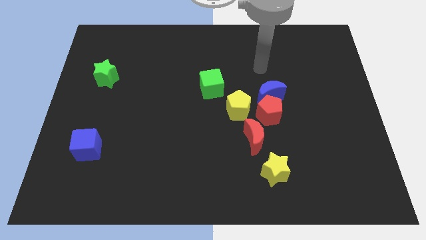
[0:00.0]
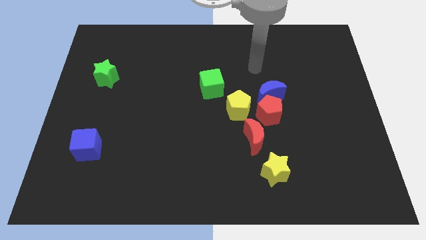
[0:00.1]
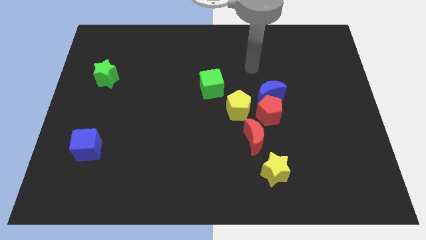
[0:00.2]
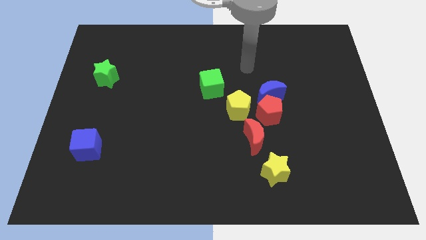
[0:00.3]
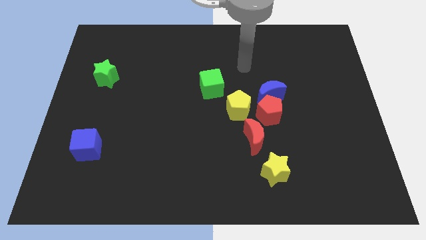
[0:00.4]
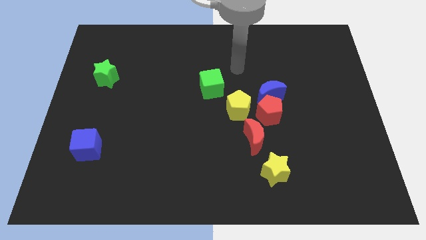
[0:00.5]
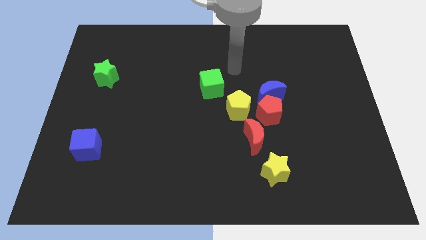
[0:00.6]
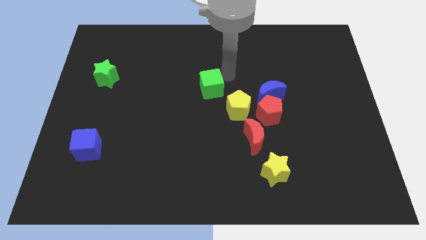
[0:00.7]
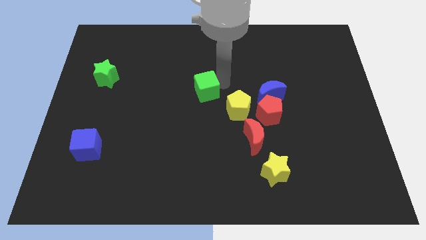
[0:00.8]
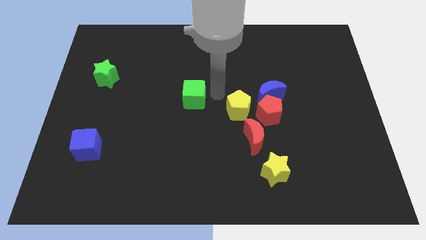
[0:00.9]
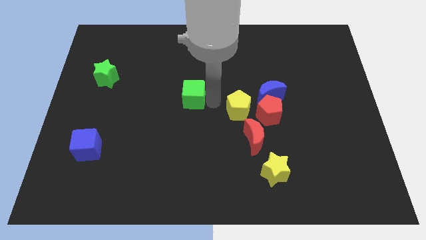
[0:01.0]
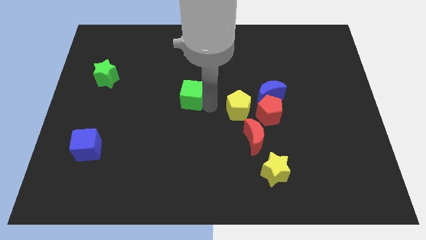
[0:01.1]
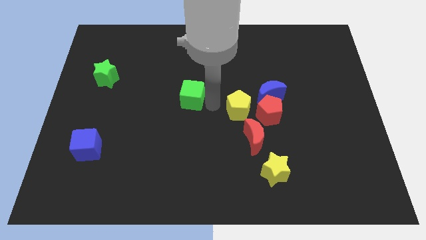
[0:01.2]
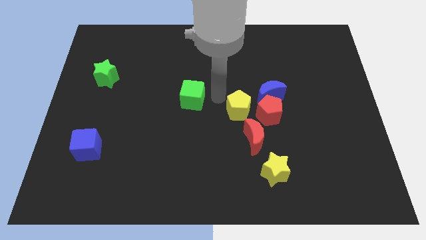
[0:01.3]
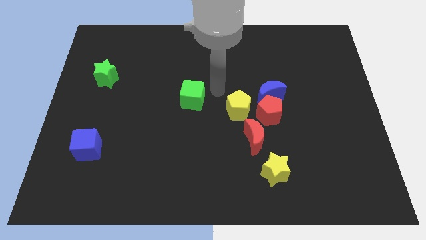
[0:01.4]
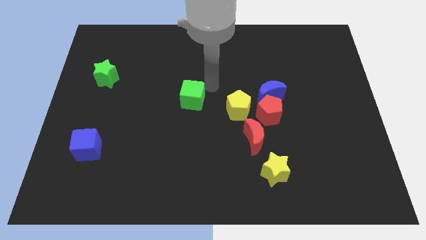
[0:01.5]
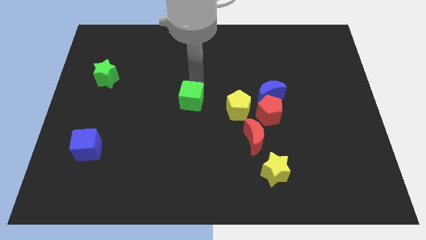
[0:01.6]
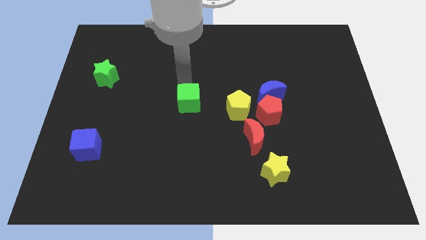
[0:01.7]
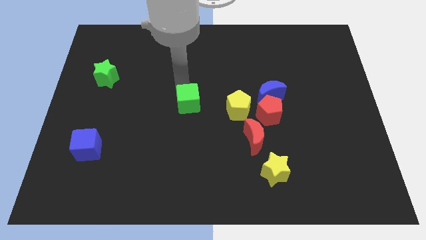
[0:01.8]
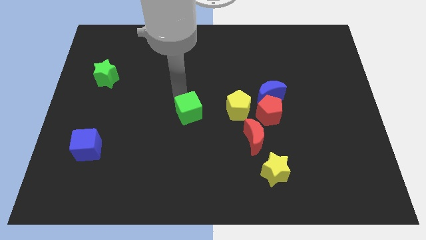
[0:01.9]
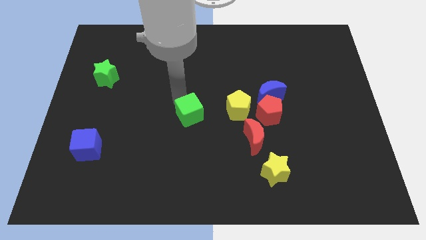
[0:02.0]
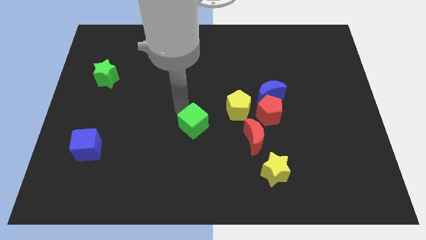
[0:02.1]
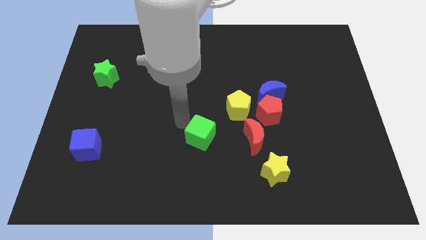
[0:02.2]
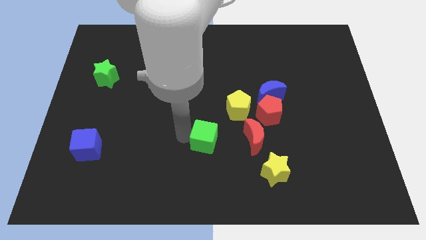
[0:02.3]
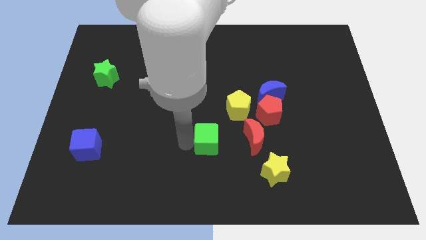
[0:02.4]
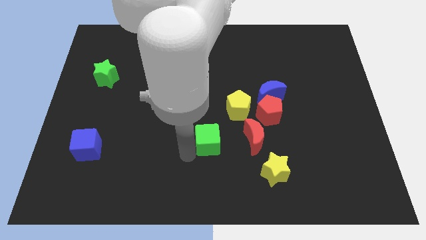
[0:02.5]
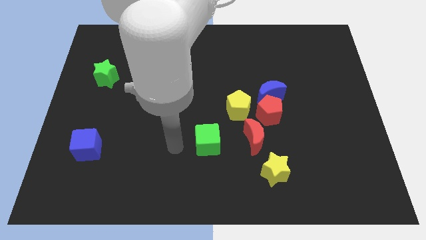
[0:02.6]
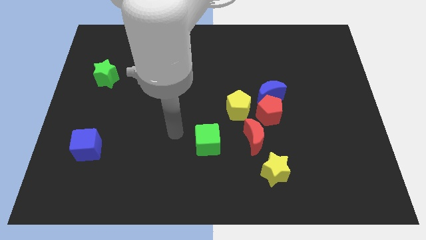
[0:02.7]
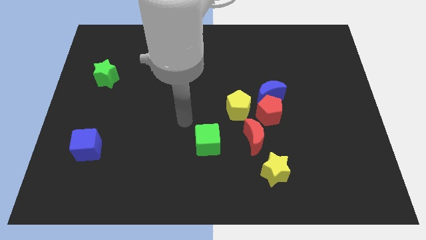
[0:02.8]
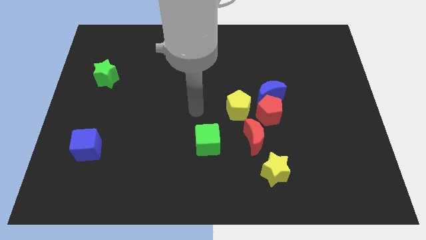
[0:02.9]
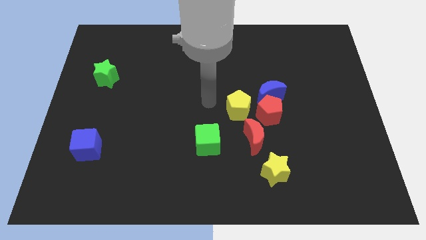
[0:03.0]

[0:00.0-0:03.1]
push green cube downwards parallel to red crescent

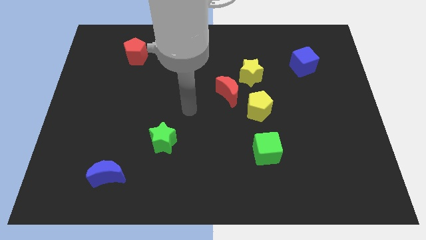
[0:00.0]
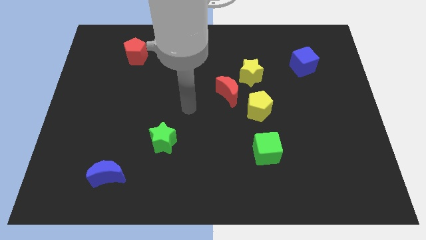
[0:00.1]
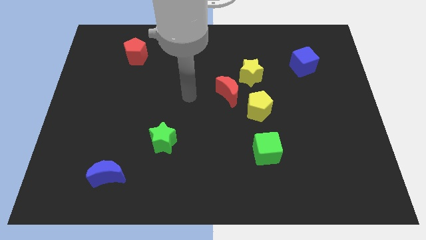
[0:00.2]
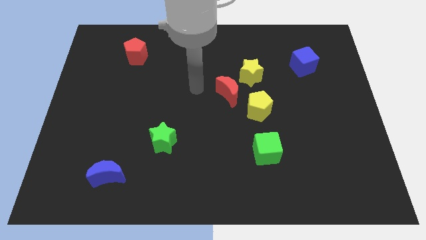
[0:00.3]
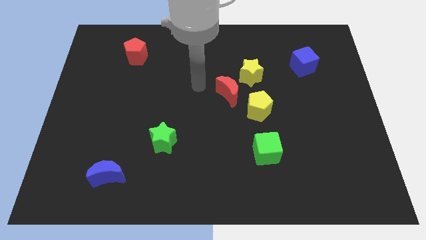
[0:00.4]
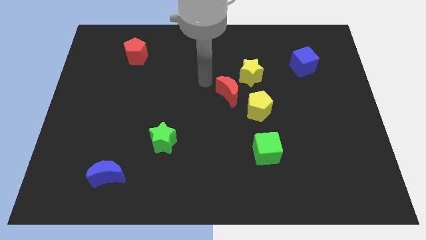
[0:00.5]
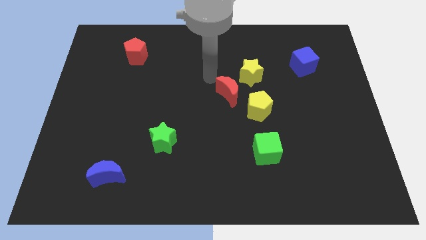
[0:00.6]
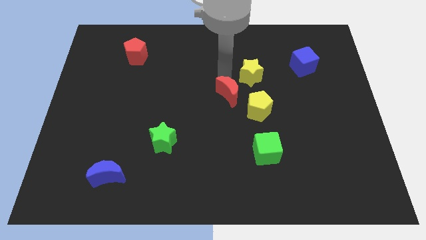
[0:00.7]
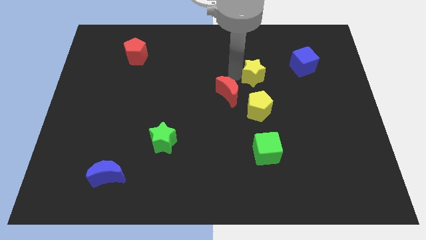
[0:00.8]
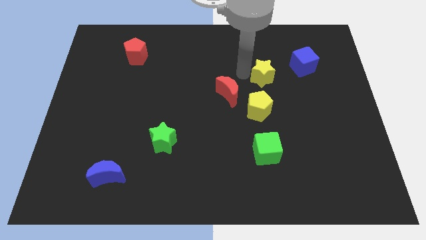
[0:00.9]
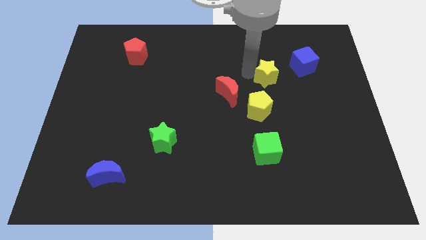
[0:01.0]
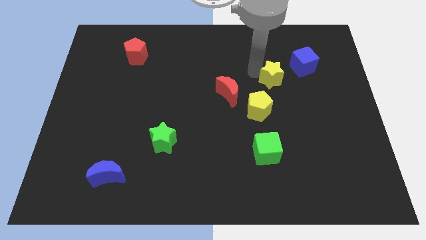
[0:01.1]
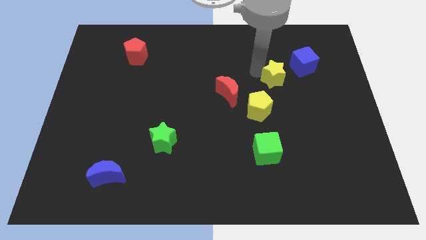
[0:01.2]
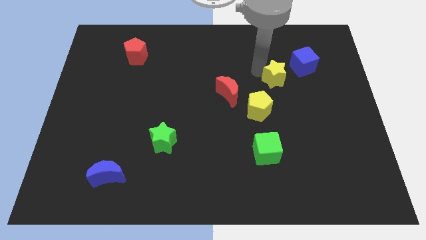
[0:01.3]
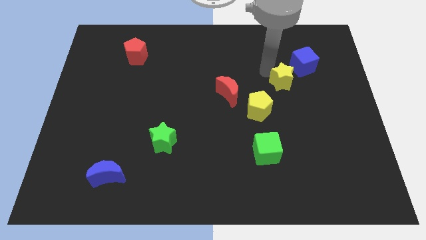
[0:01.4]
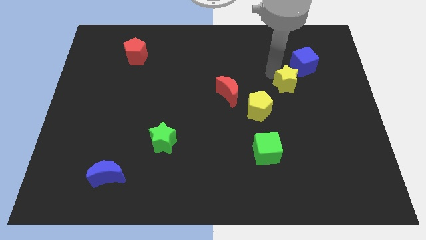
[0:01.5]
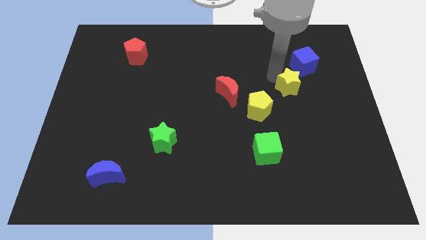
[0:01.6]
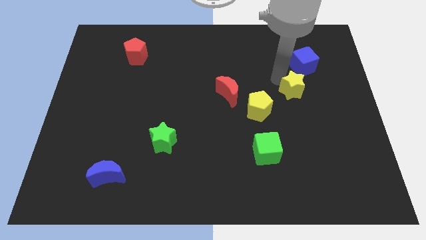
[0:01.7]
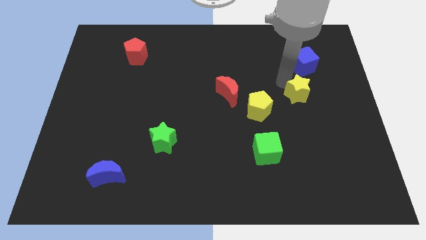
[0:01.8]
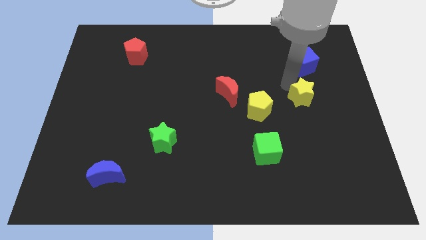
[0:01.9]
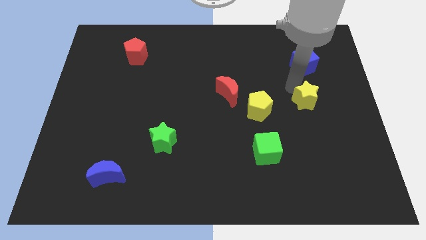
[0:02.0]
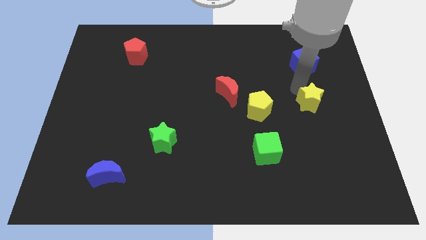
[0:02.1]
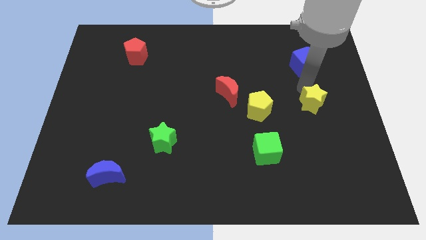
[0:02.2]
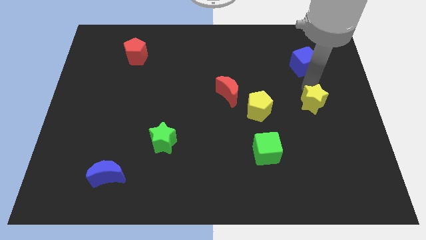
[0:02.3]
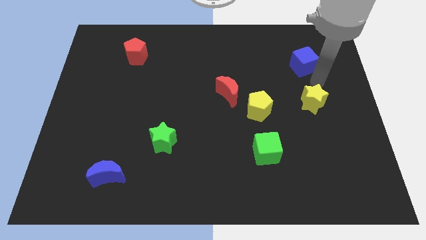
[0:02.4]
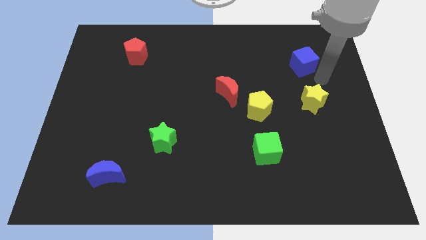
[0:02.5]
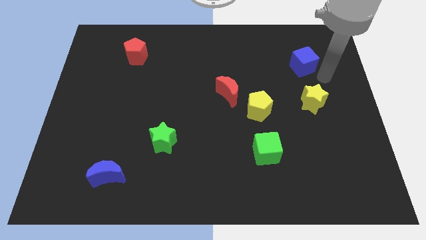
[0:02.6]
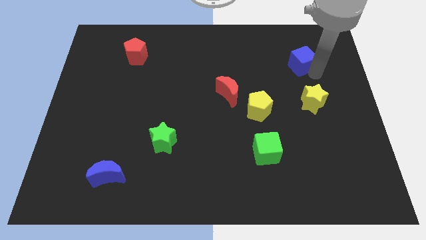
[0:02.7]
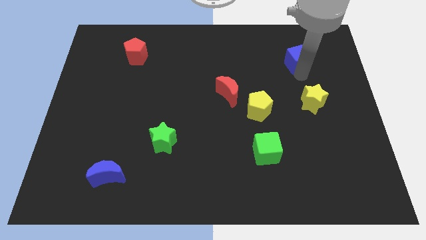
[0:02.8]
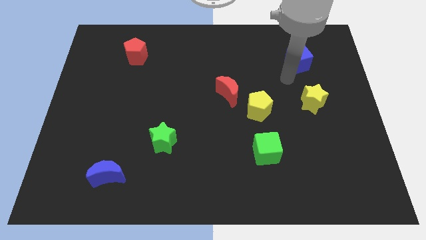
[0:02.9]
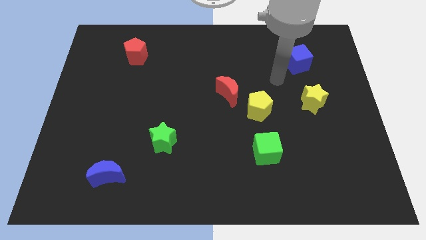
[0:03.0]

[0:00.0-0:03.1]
move yellow star to the bottom right of blue cube

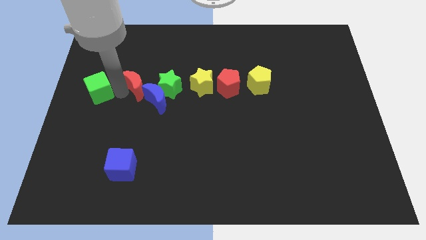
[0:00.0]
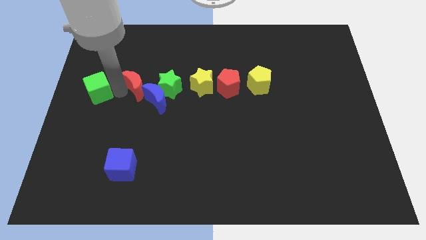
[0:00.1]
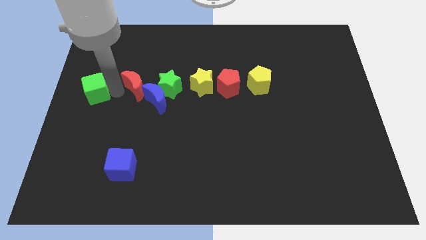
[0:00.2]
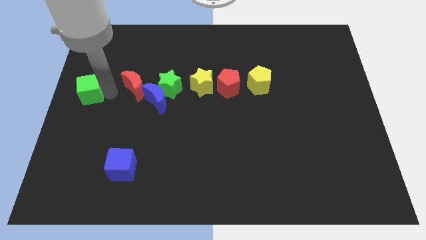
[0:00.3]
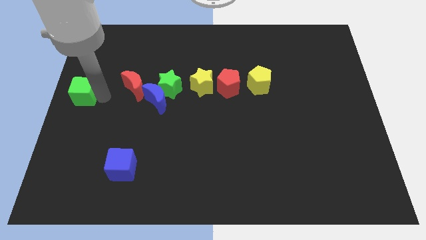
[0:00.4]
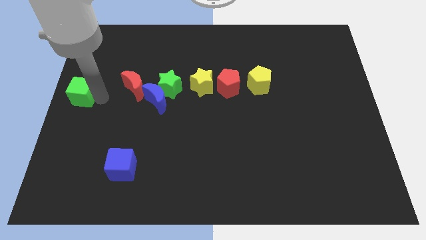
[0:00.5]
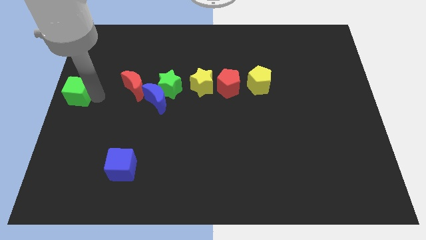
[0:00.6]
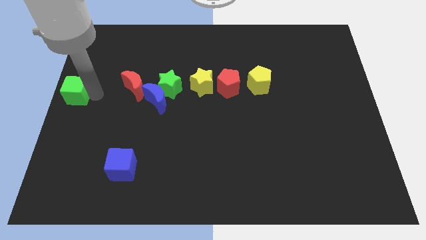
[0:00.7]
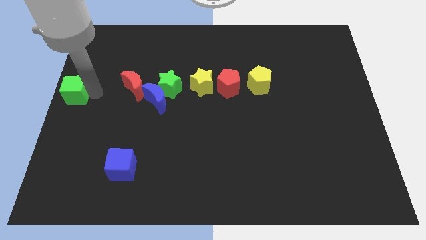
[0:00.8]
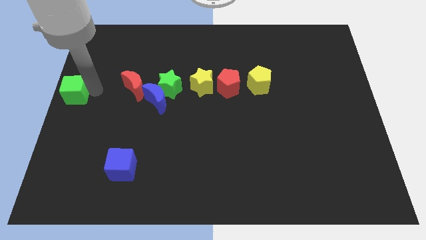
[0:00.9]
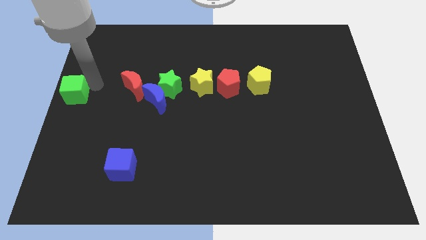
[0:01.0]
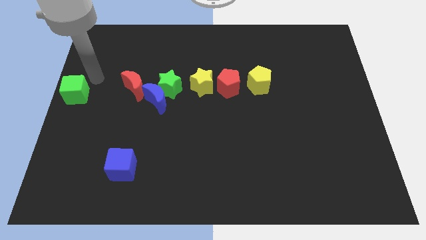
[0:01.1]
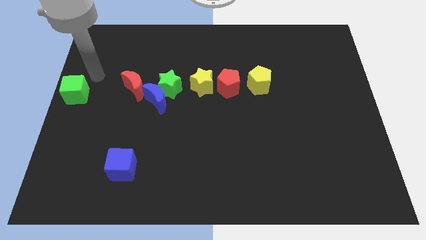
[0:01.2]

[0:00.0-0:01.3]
move the green cube to the center left of the board

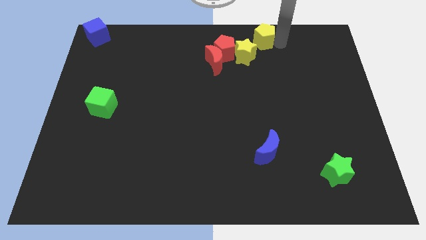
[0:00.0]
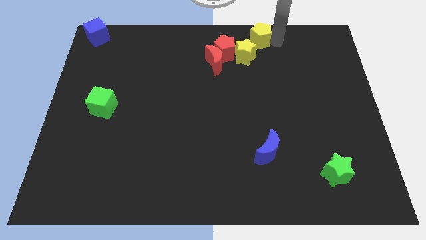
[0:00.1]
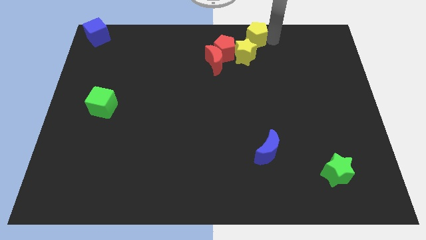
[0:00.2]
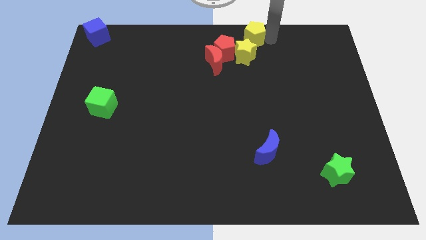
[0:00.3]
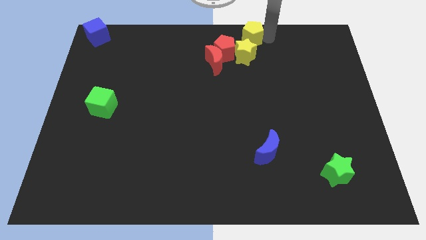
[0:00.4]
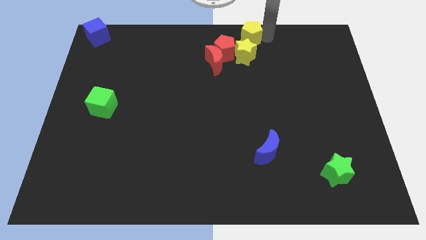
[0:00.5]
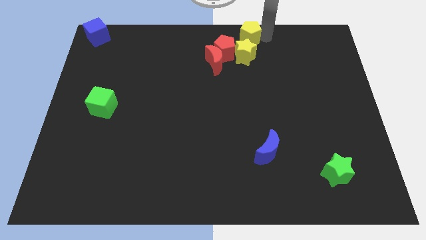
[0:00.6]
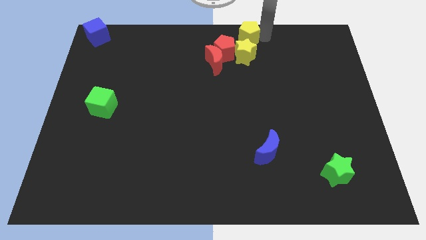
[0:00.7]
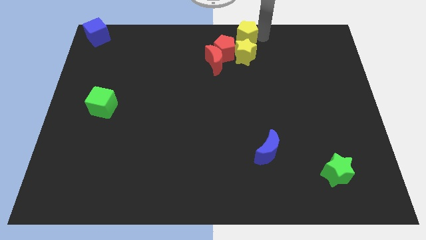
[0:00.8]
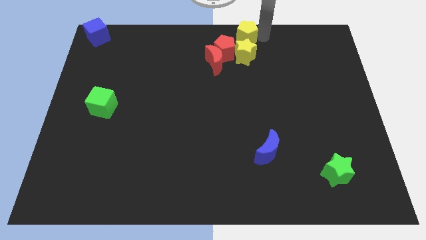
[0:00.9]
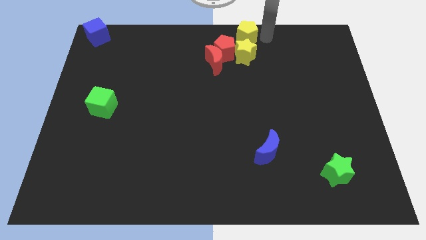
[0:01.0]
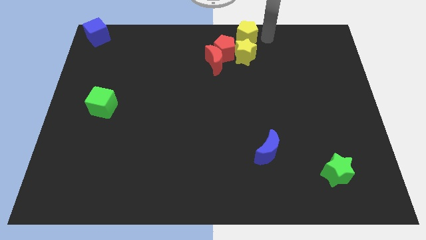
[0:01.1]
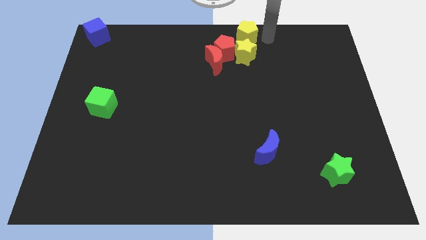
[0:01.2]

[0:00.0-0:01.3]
move the yellow pentagon above the yellow star

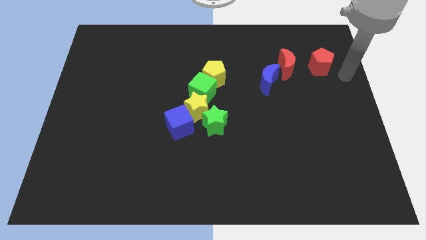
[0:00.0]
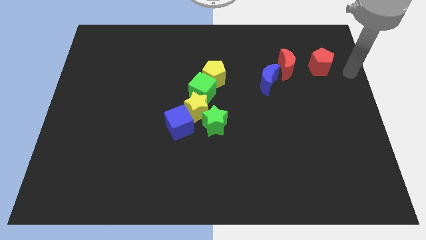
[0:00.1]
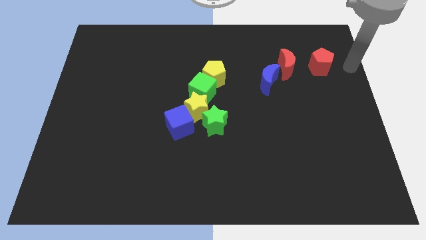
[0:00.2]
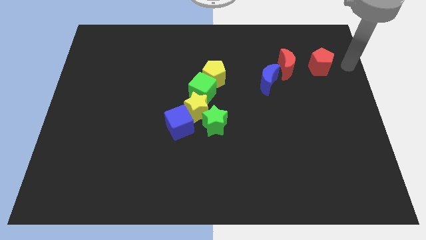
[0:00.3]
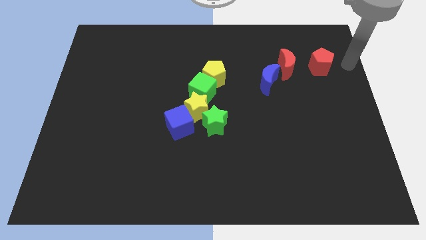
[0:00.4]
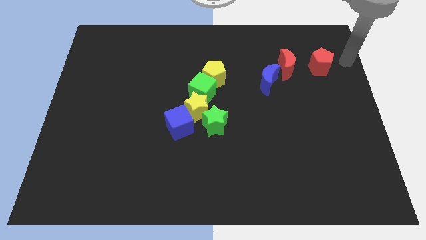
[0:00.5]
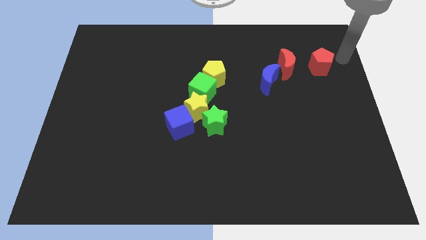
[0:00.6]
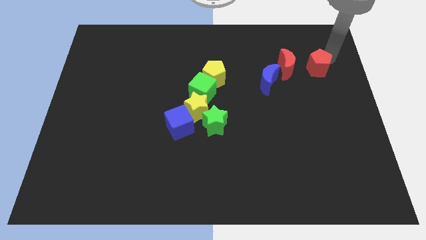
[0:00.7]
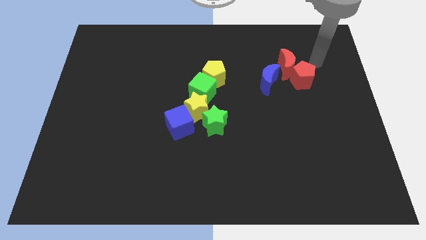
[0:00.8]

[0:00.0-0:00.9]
put the red pentagon at the bottom right side of red moon
